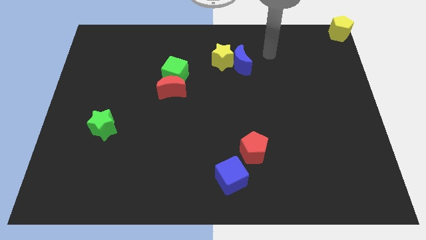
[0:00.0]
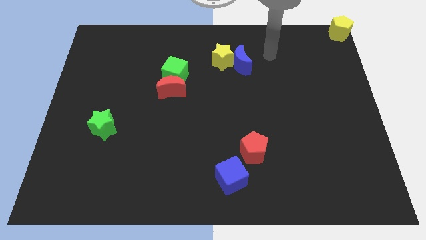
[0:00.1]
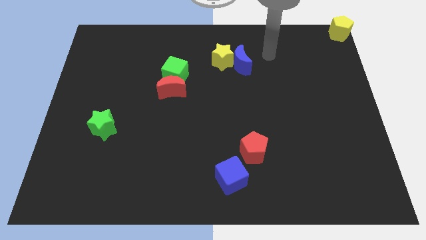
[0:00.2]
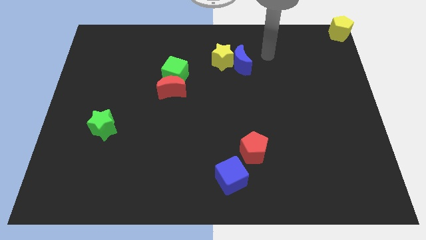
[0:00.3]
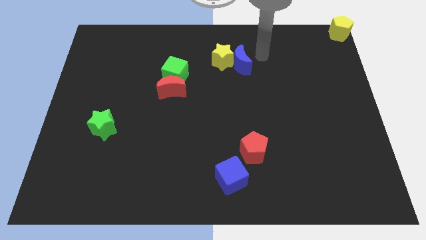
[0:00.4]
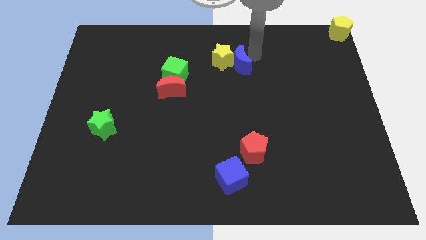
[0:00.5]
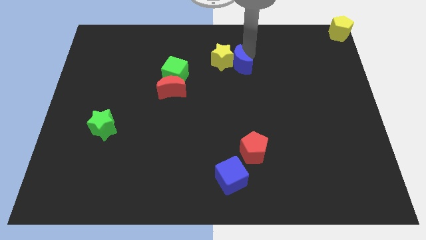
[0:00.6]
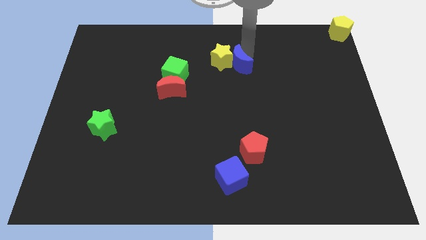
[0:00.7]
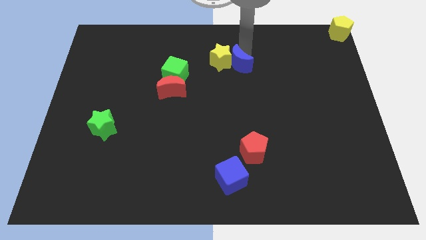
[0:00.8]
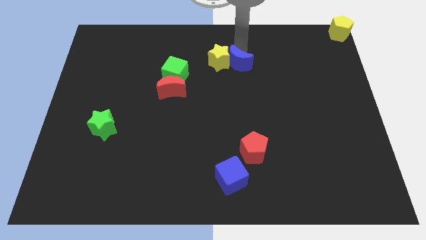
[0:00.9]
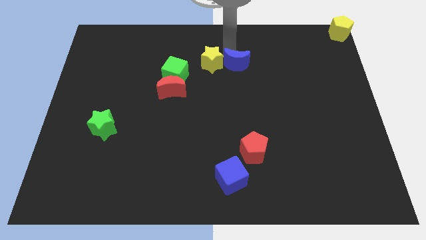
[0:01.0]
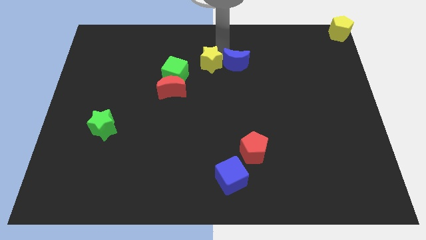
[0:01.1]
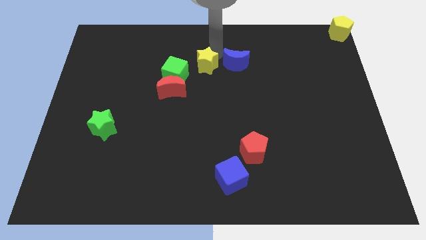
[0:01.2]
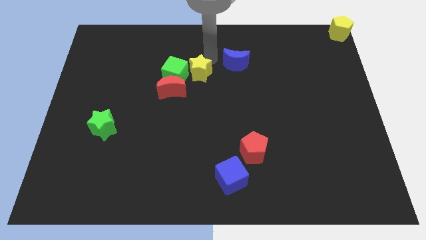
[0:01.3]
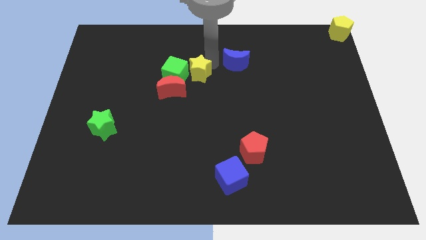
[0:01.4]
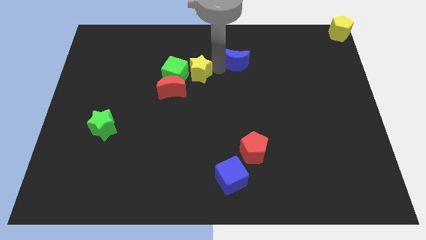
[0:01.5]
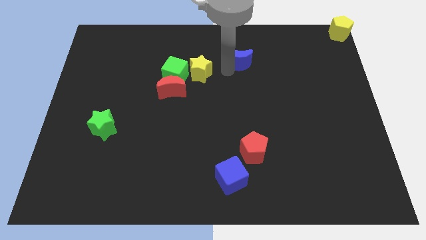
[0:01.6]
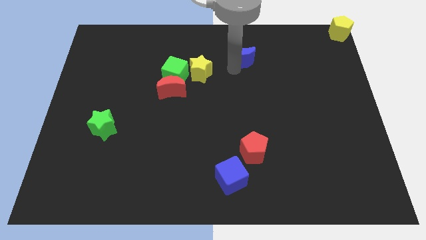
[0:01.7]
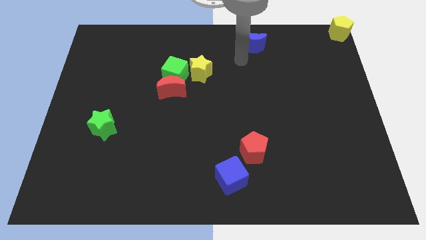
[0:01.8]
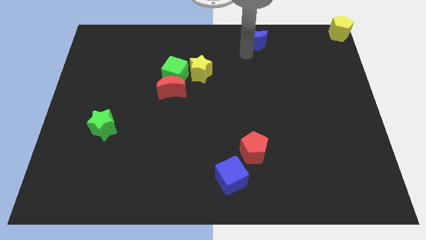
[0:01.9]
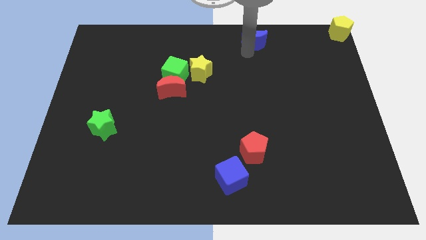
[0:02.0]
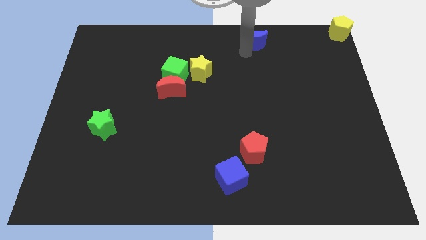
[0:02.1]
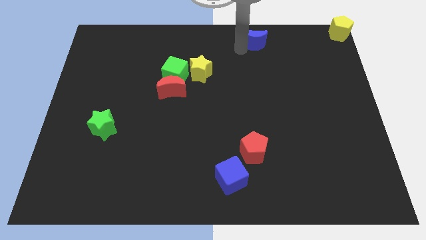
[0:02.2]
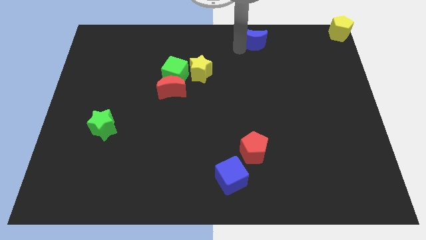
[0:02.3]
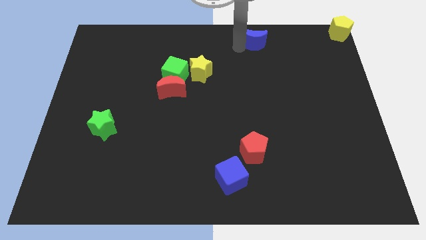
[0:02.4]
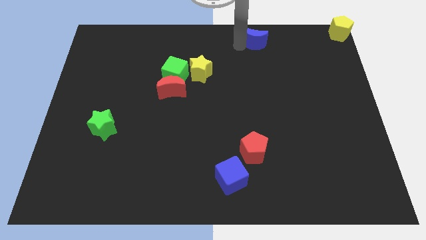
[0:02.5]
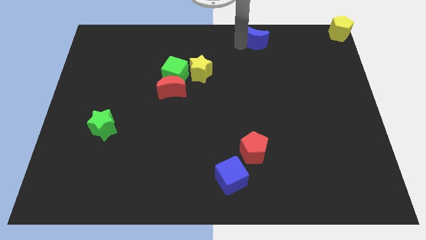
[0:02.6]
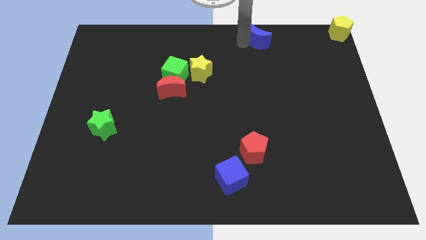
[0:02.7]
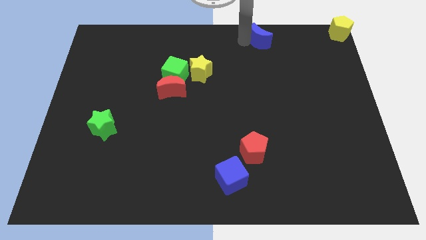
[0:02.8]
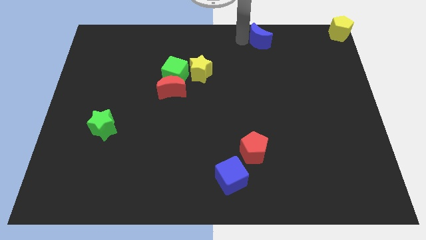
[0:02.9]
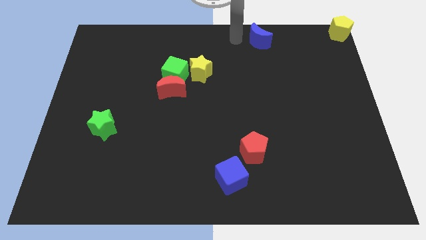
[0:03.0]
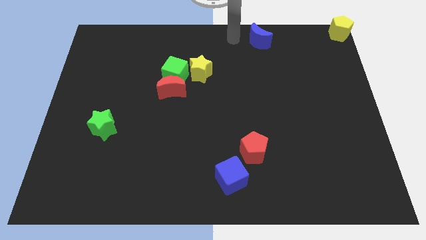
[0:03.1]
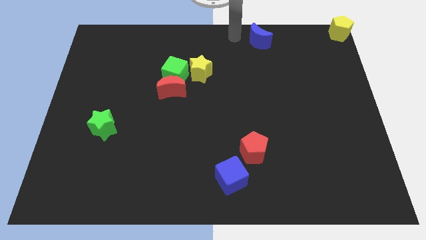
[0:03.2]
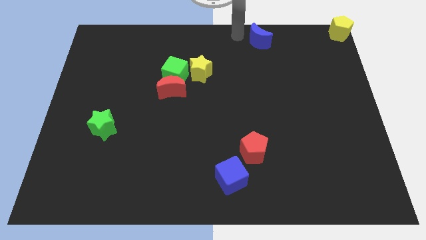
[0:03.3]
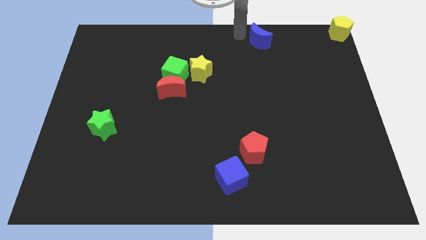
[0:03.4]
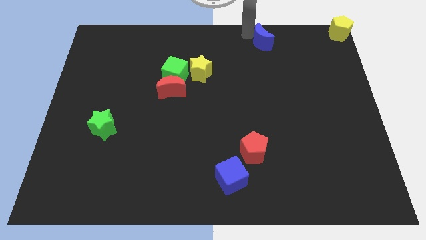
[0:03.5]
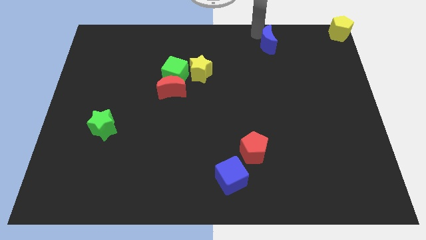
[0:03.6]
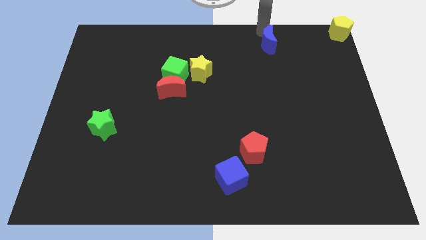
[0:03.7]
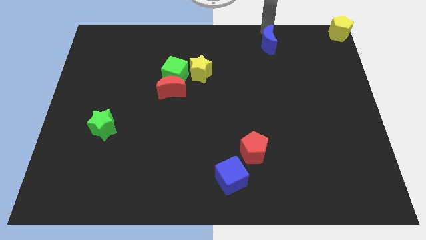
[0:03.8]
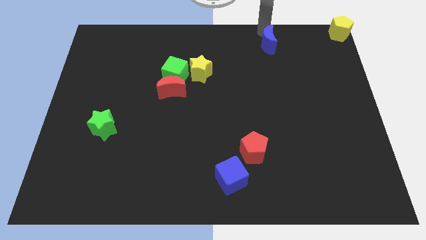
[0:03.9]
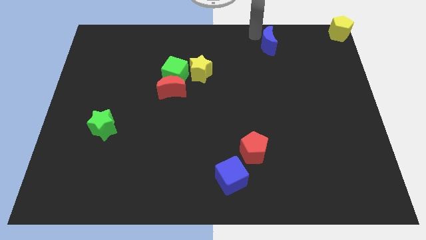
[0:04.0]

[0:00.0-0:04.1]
separate blue moon from yellow star

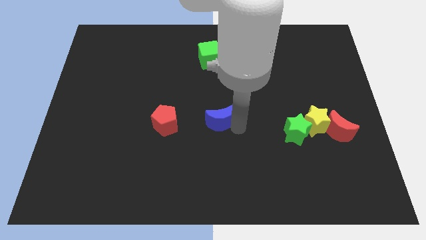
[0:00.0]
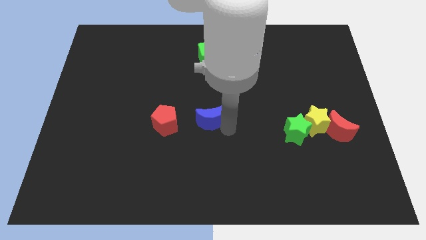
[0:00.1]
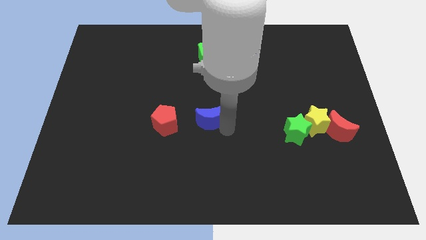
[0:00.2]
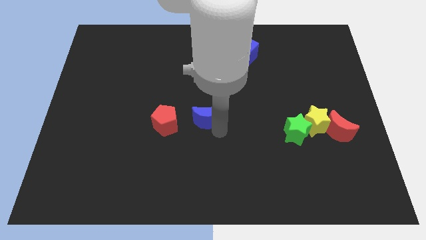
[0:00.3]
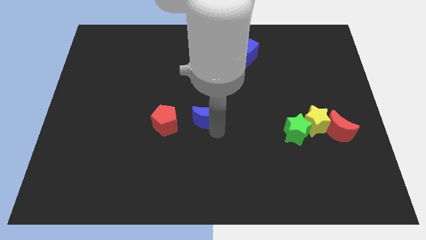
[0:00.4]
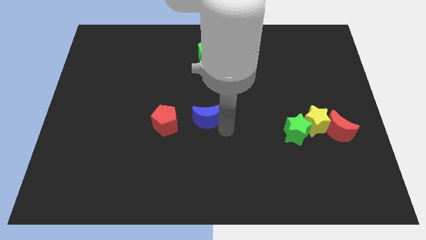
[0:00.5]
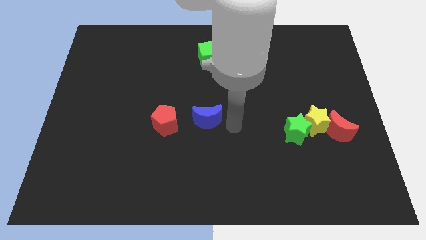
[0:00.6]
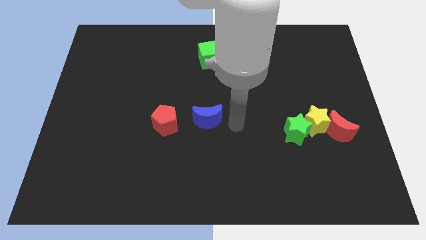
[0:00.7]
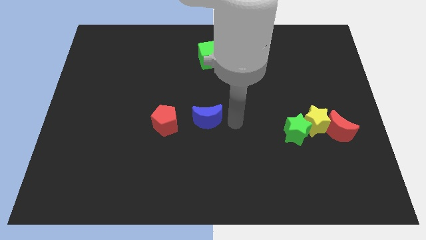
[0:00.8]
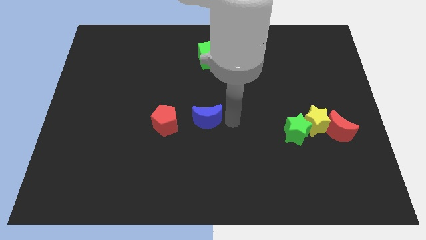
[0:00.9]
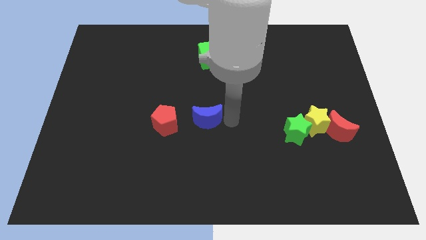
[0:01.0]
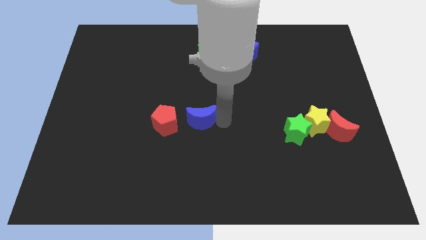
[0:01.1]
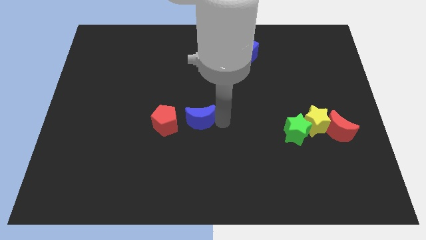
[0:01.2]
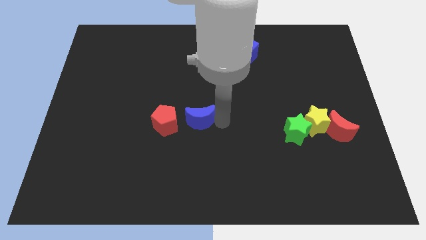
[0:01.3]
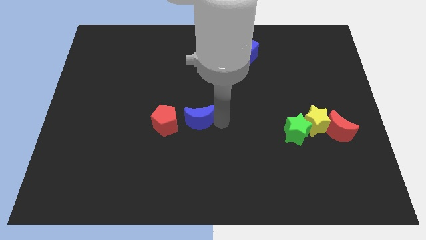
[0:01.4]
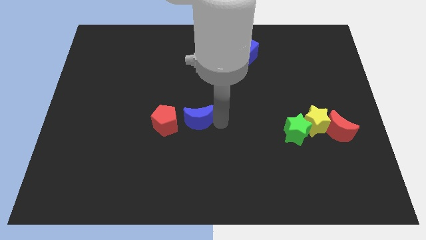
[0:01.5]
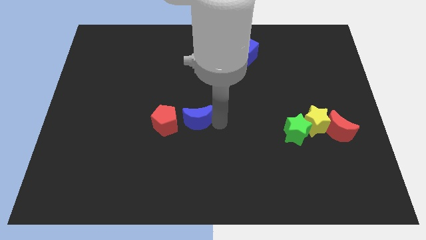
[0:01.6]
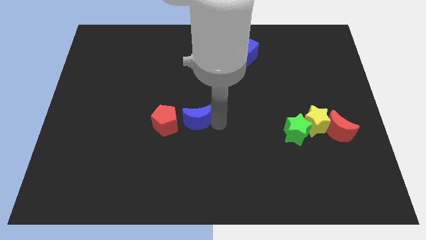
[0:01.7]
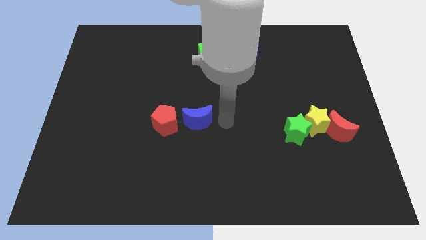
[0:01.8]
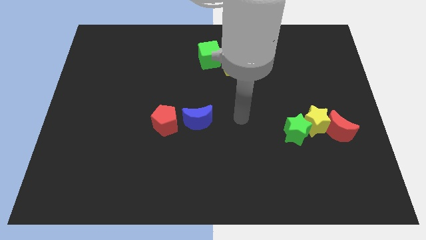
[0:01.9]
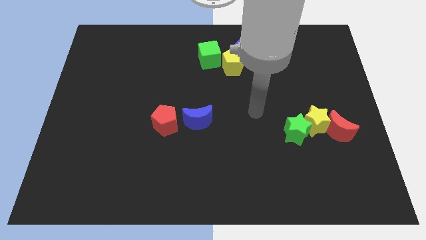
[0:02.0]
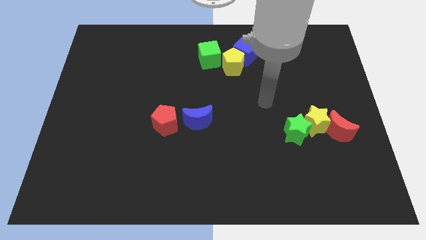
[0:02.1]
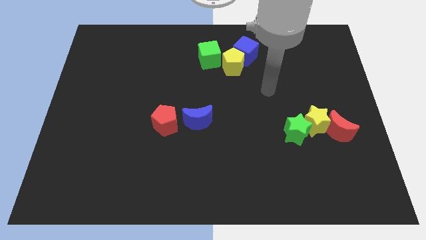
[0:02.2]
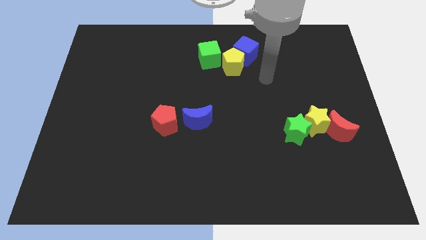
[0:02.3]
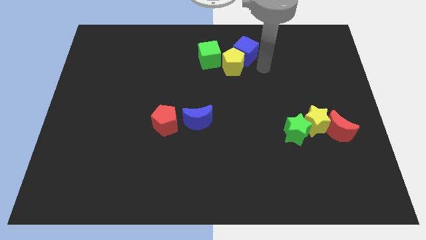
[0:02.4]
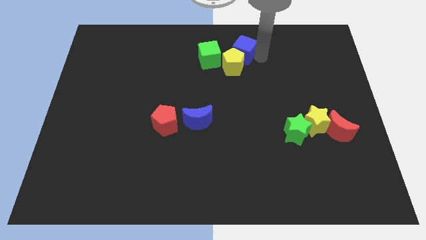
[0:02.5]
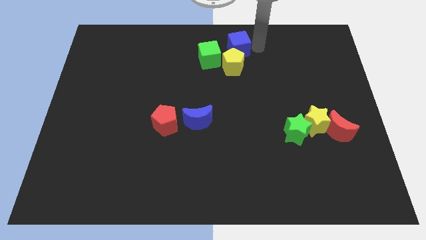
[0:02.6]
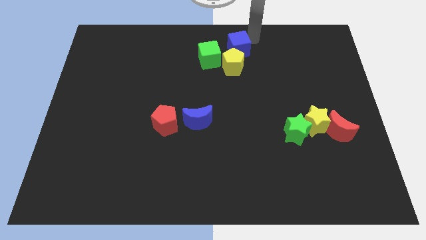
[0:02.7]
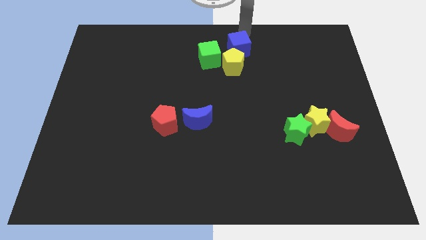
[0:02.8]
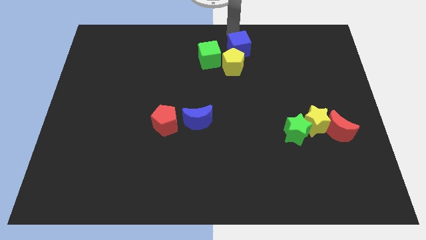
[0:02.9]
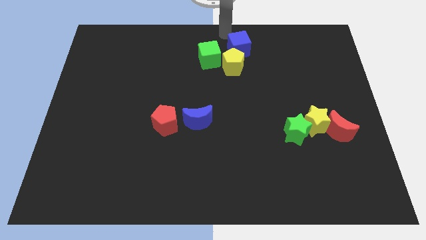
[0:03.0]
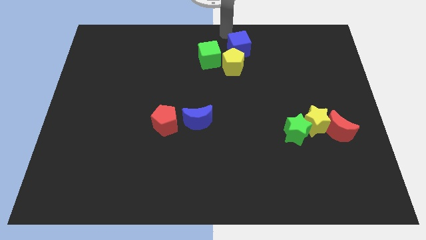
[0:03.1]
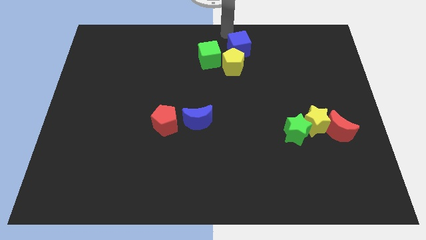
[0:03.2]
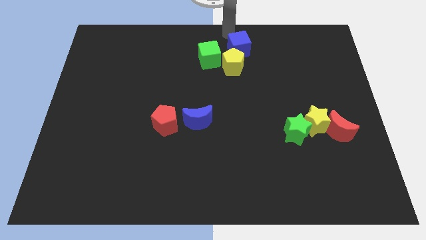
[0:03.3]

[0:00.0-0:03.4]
tap blue blocks slightly

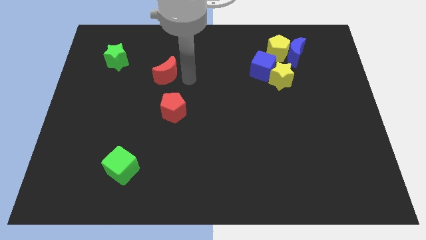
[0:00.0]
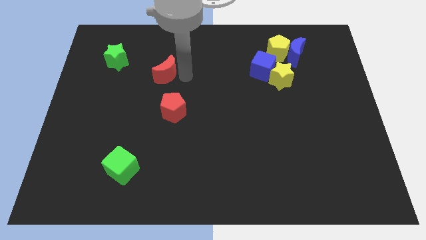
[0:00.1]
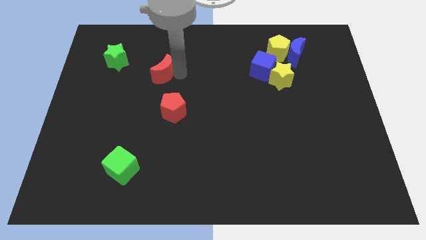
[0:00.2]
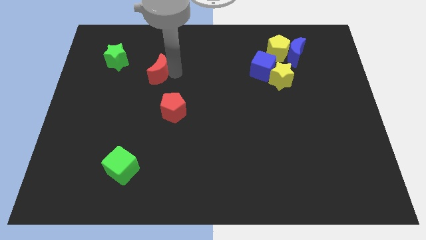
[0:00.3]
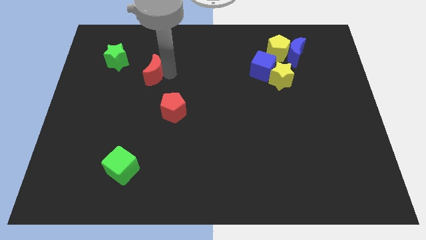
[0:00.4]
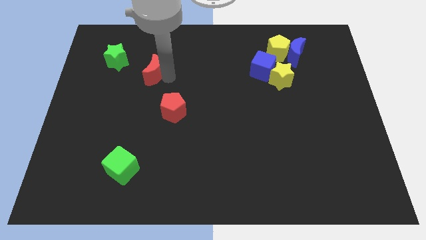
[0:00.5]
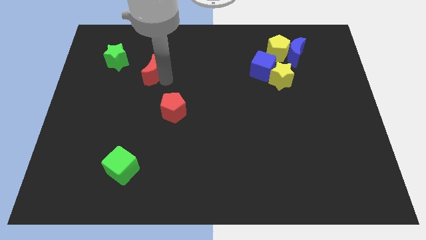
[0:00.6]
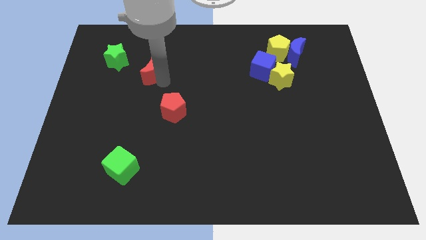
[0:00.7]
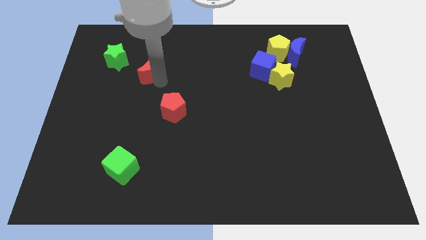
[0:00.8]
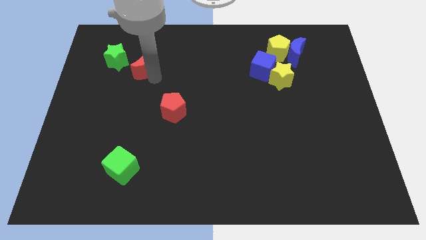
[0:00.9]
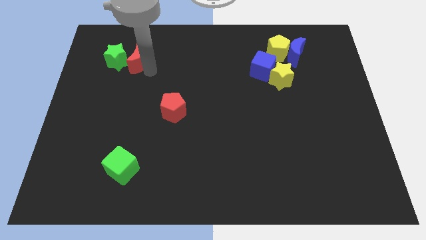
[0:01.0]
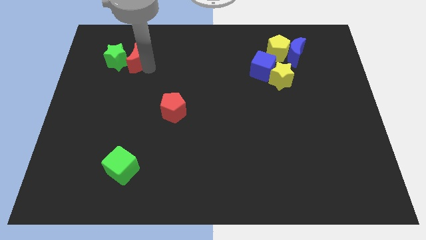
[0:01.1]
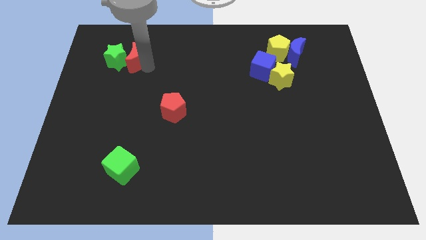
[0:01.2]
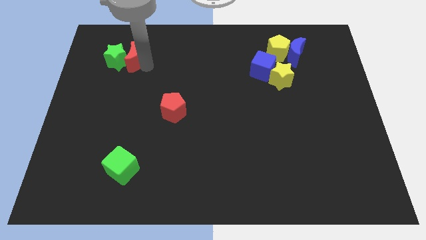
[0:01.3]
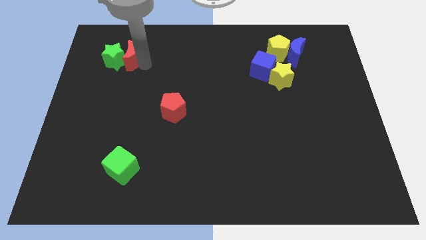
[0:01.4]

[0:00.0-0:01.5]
push the red crescent into the green star

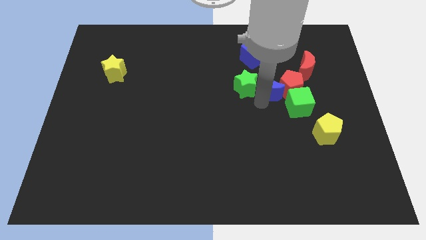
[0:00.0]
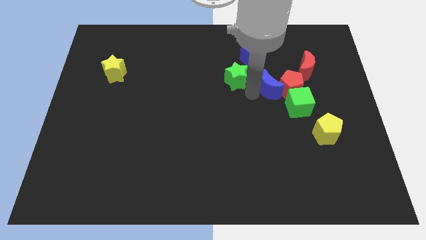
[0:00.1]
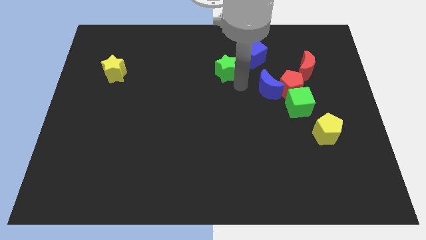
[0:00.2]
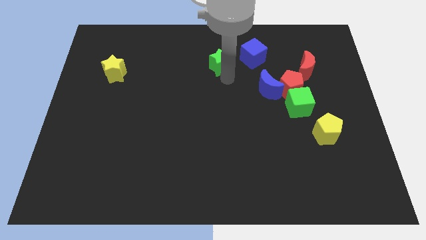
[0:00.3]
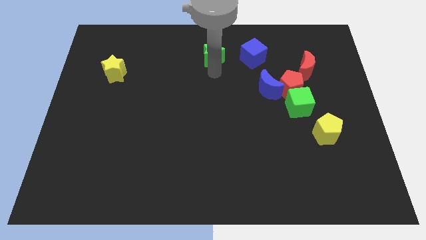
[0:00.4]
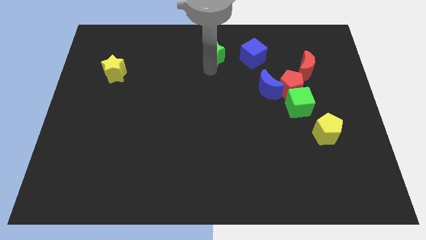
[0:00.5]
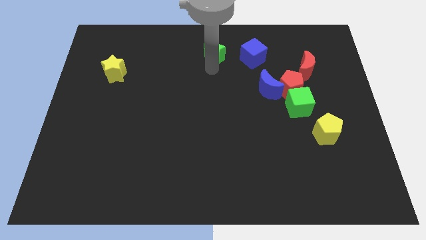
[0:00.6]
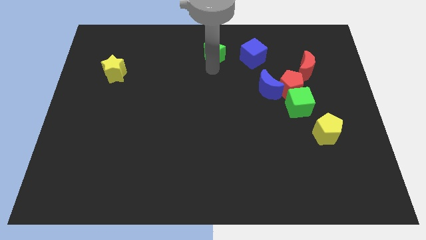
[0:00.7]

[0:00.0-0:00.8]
place green star to the left of the blue cube
